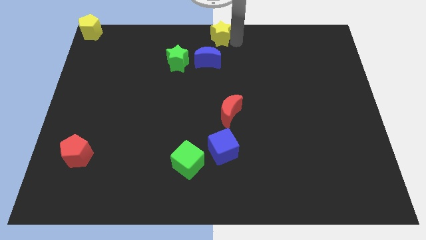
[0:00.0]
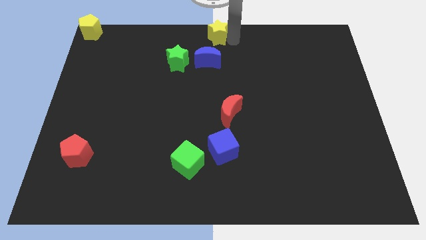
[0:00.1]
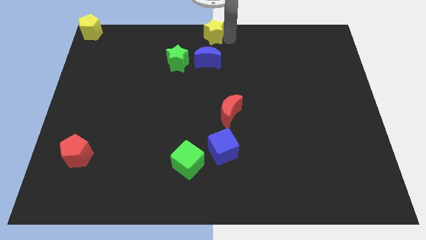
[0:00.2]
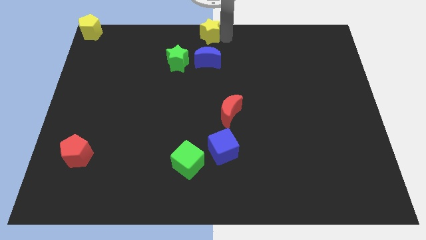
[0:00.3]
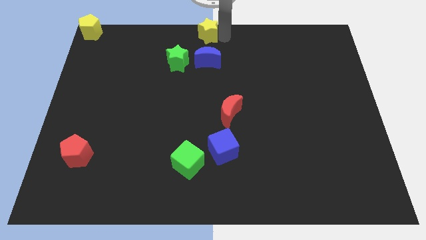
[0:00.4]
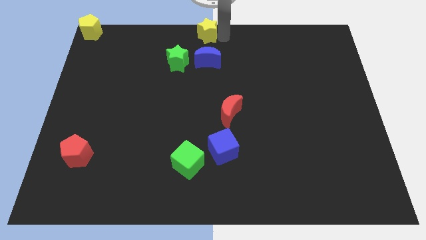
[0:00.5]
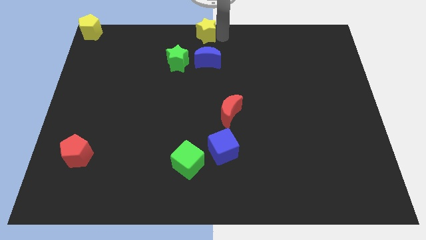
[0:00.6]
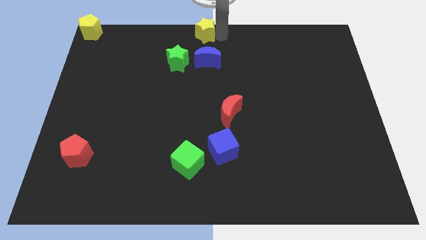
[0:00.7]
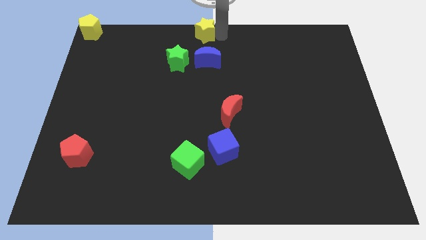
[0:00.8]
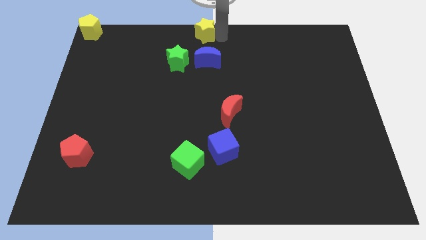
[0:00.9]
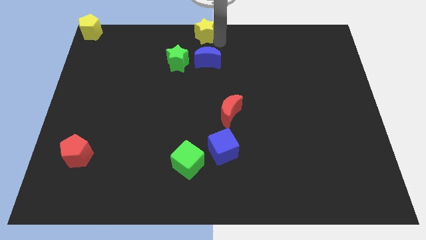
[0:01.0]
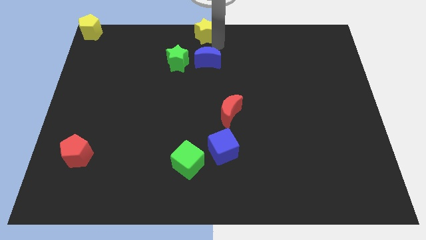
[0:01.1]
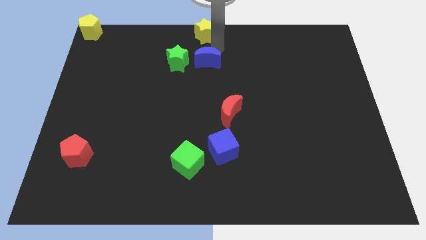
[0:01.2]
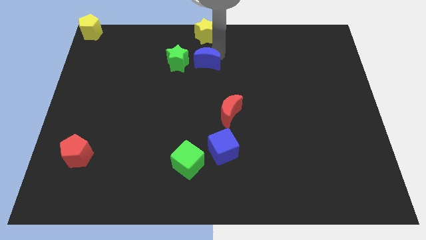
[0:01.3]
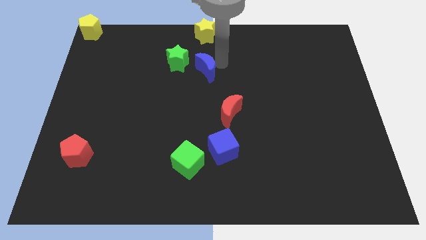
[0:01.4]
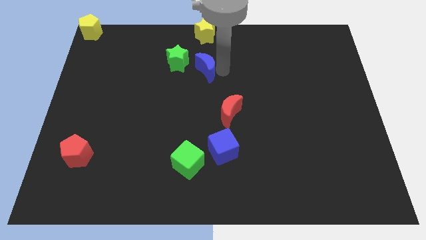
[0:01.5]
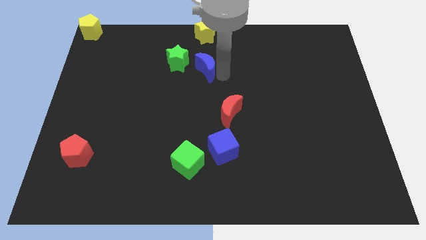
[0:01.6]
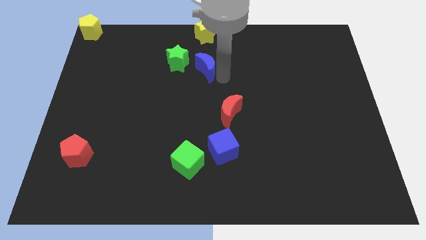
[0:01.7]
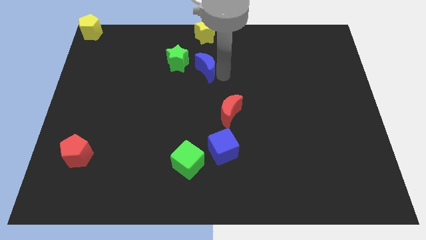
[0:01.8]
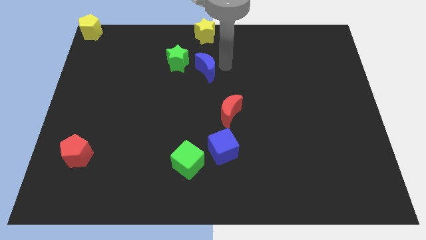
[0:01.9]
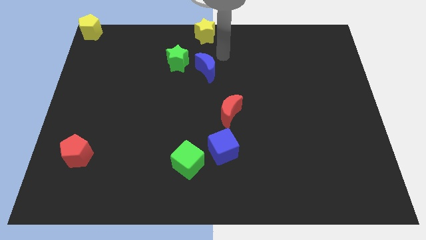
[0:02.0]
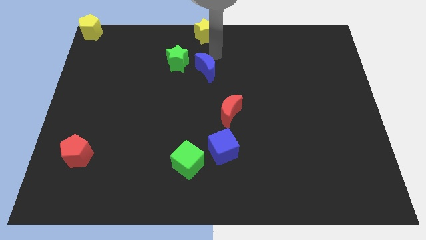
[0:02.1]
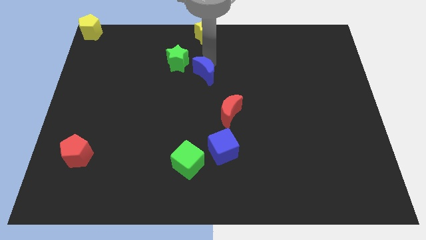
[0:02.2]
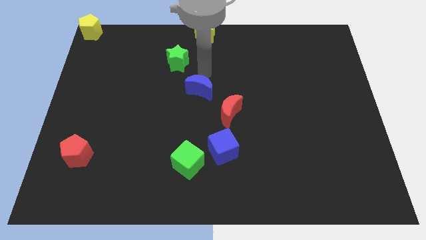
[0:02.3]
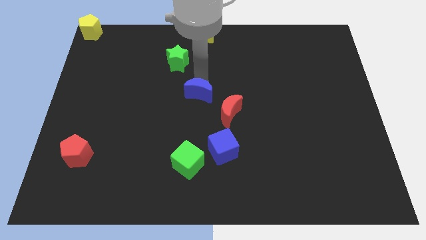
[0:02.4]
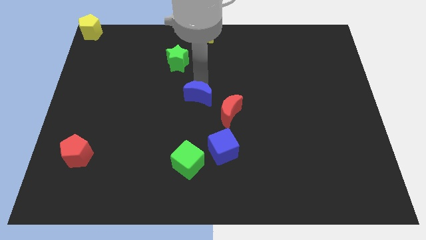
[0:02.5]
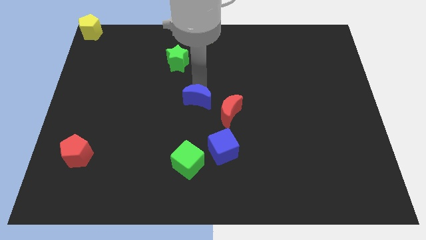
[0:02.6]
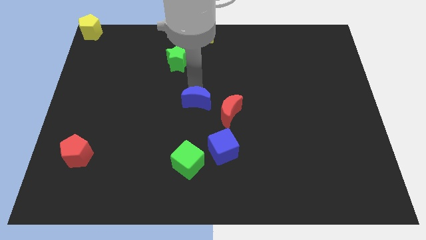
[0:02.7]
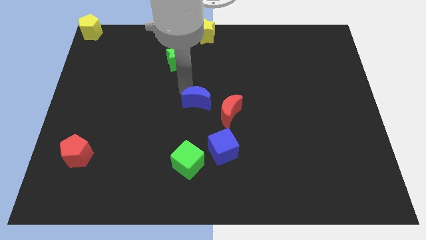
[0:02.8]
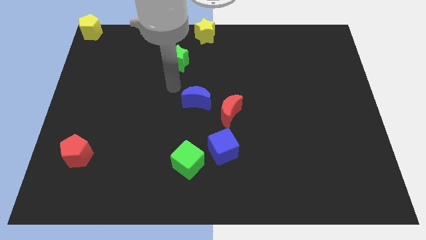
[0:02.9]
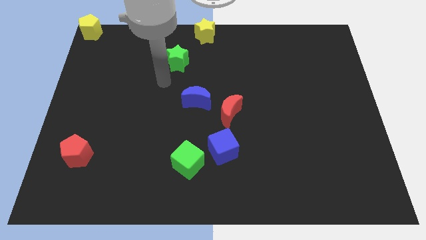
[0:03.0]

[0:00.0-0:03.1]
push blue crescent to the center of the board

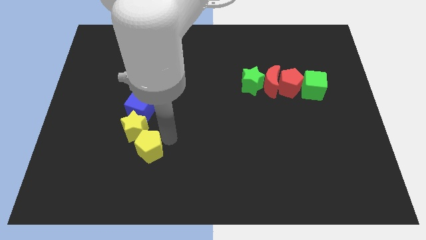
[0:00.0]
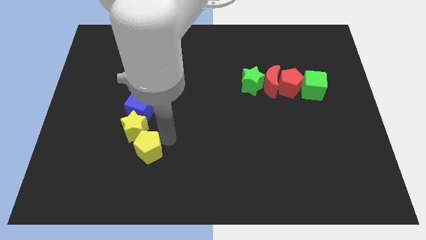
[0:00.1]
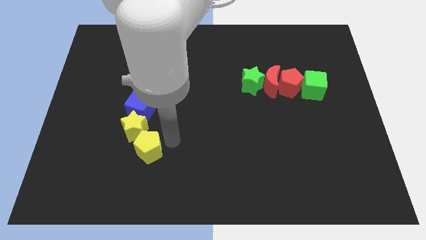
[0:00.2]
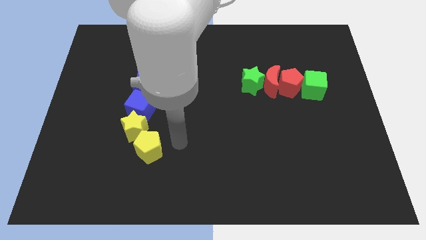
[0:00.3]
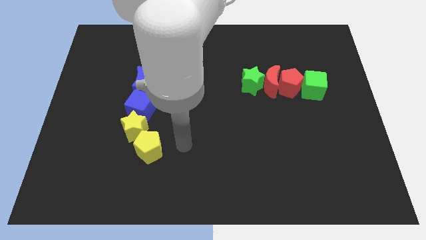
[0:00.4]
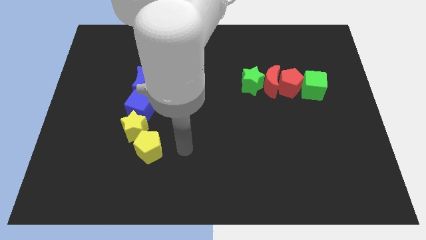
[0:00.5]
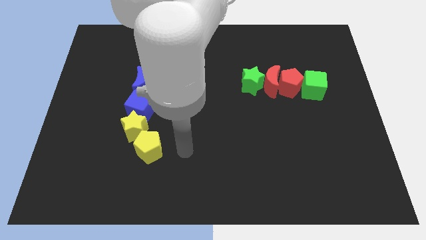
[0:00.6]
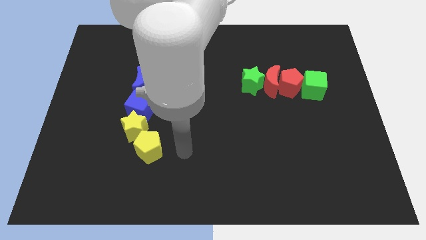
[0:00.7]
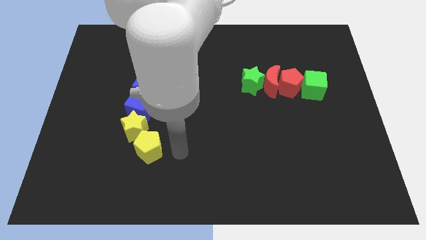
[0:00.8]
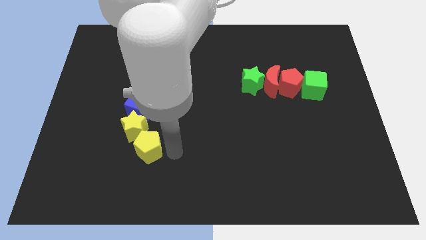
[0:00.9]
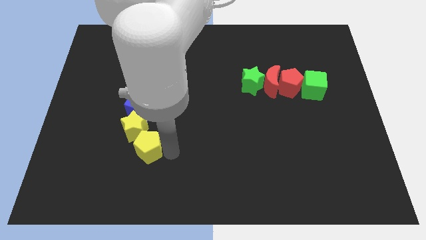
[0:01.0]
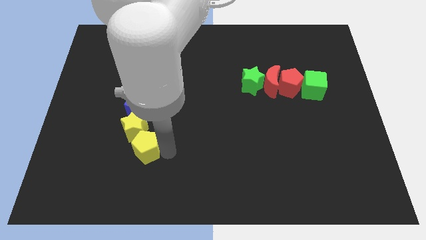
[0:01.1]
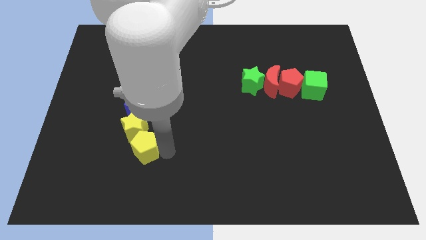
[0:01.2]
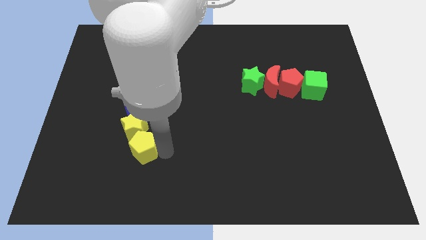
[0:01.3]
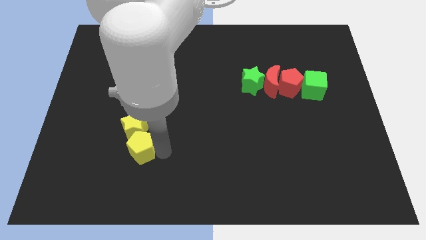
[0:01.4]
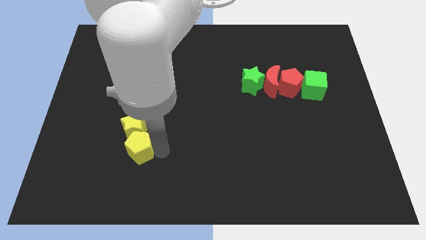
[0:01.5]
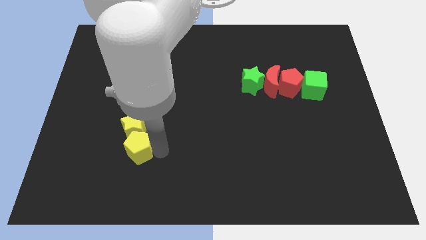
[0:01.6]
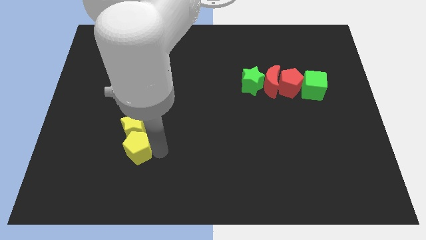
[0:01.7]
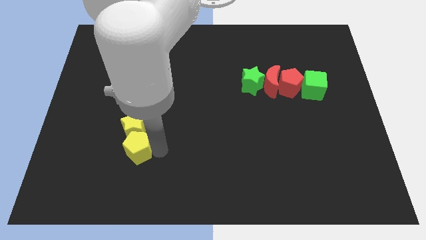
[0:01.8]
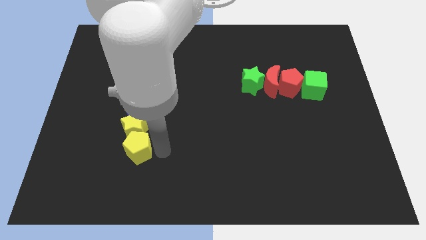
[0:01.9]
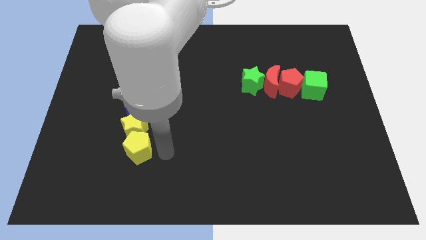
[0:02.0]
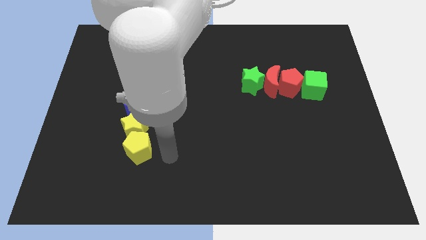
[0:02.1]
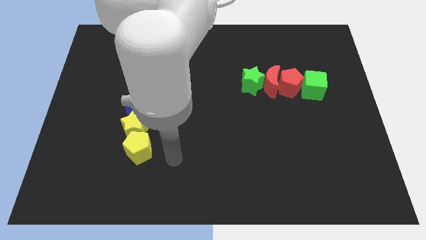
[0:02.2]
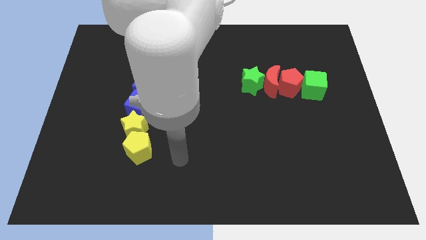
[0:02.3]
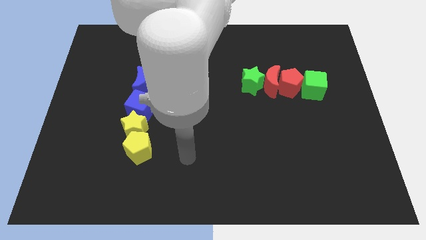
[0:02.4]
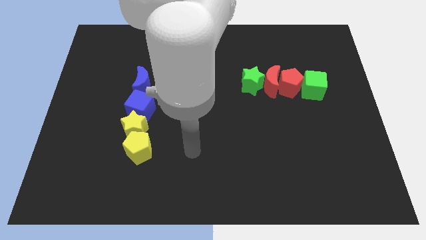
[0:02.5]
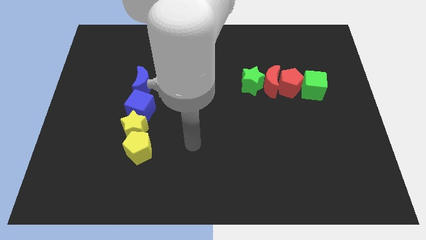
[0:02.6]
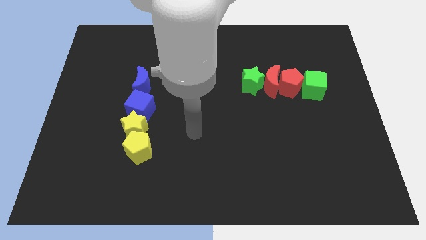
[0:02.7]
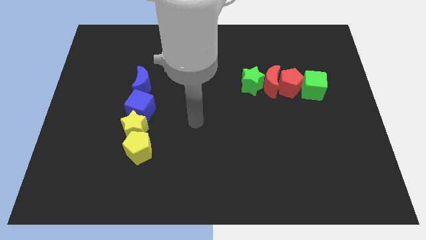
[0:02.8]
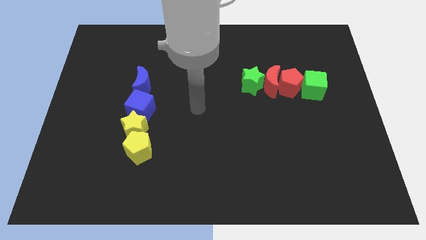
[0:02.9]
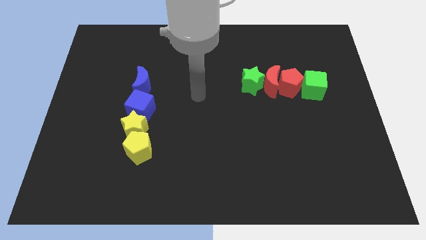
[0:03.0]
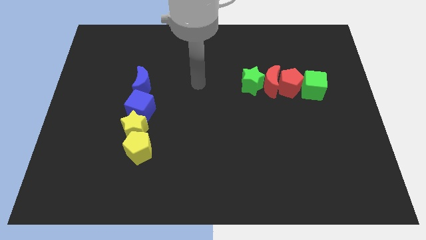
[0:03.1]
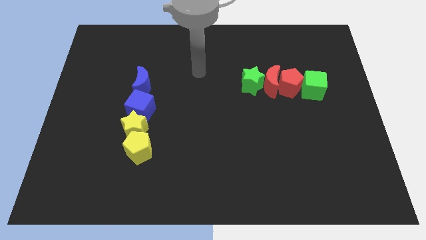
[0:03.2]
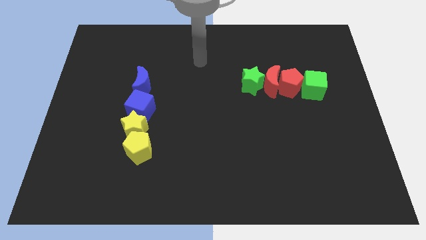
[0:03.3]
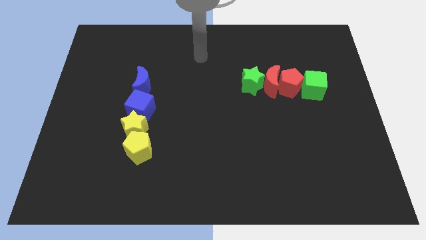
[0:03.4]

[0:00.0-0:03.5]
place the yellow pentagon towards the down side of the yellow star

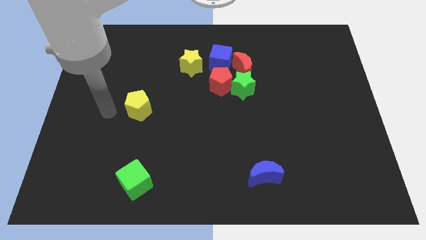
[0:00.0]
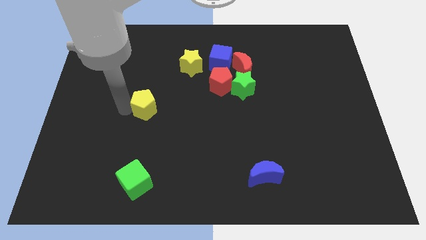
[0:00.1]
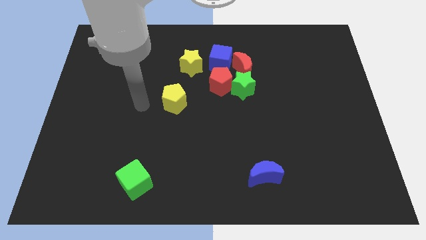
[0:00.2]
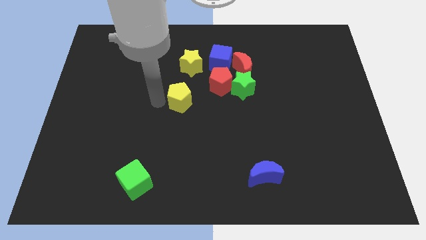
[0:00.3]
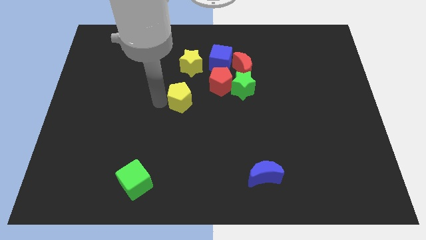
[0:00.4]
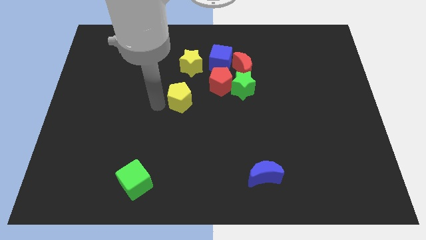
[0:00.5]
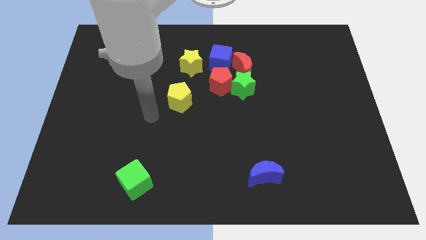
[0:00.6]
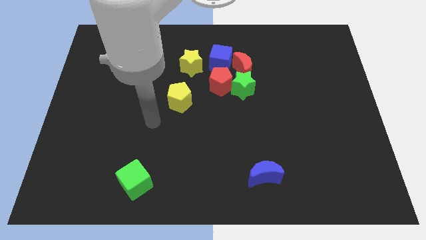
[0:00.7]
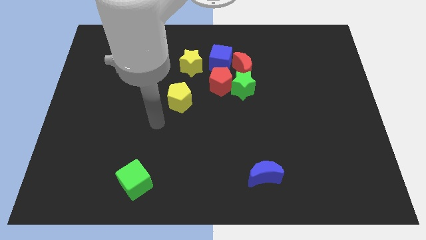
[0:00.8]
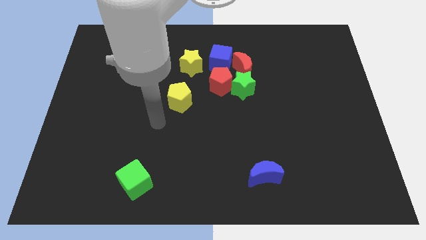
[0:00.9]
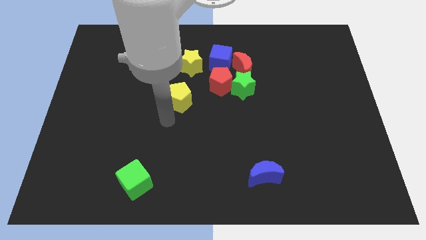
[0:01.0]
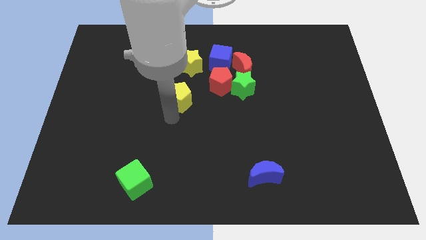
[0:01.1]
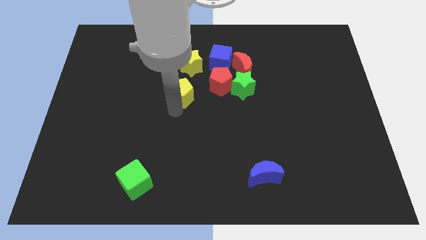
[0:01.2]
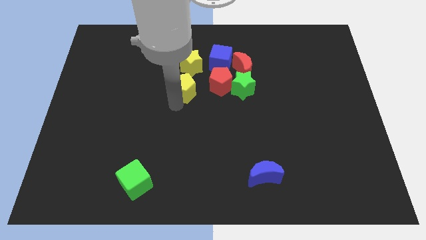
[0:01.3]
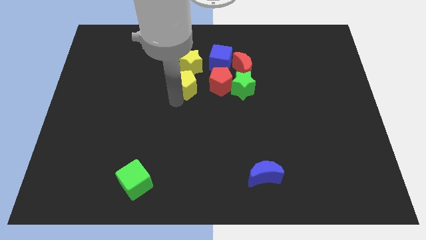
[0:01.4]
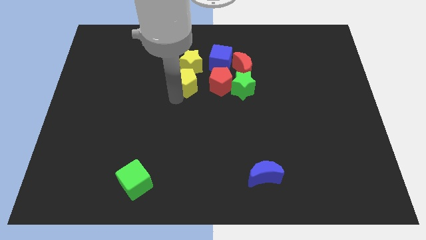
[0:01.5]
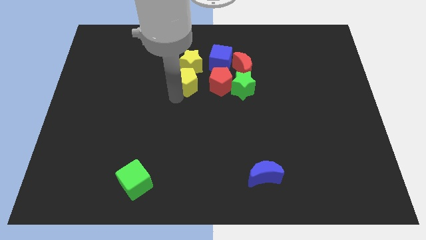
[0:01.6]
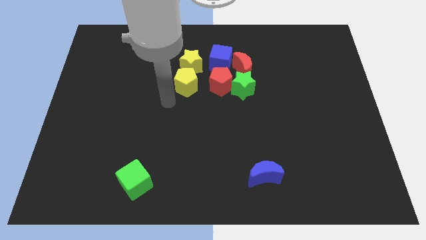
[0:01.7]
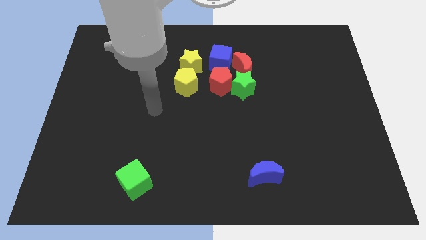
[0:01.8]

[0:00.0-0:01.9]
push the yellow pentagon to the bottom side of the yellow star

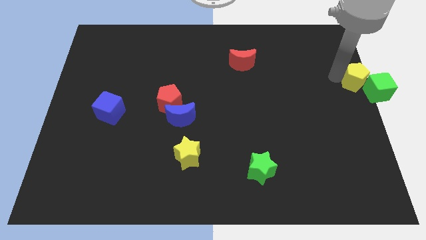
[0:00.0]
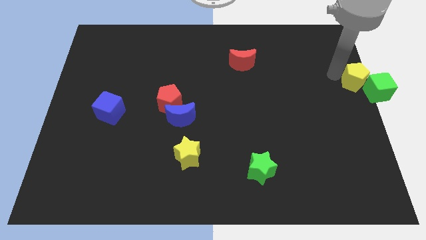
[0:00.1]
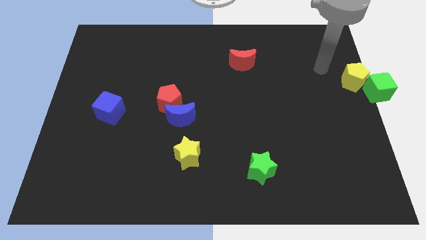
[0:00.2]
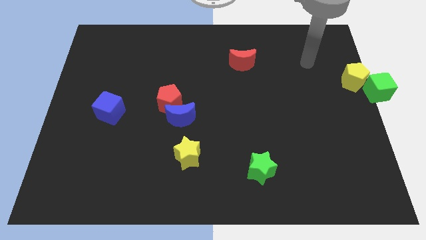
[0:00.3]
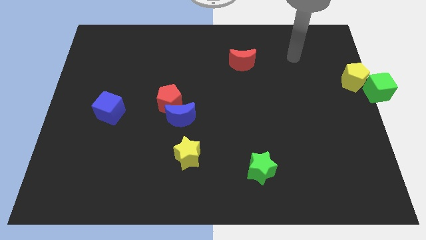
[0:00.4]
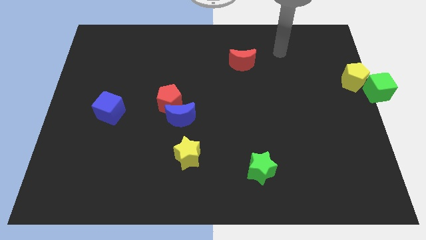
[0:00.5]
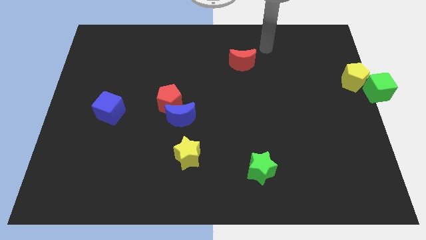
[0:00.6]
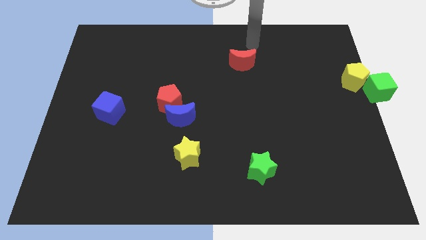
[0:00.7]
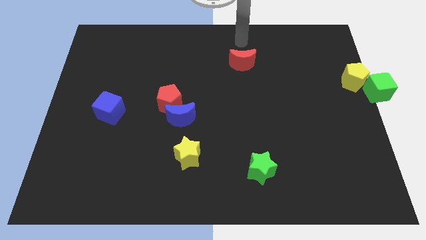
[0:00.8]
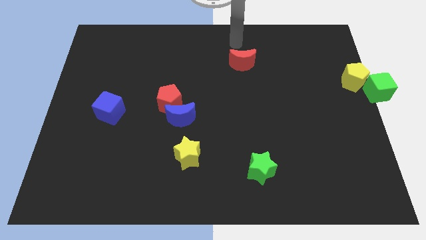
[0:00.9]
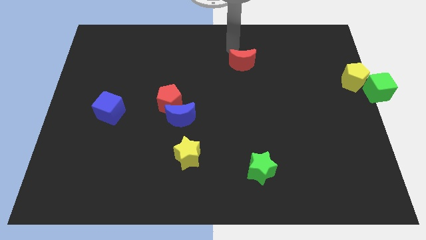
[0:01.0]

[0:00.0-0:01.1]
move your hand away from yellow pentagon
